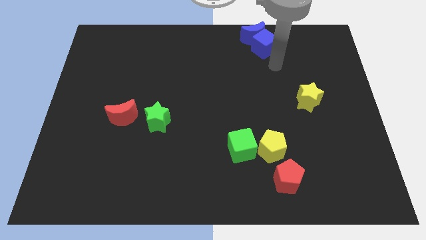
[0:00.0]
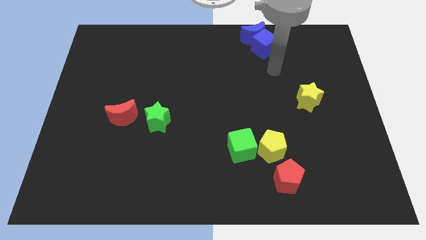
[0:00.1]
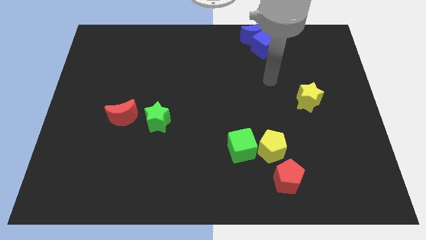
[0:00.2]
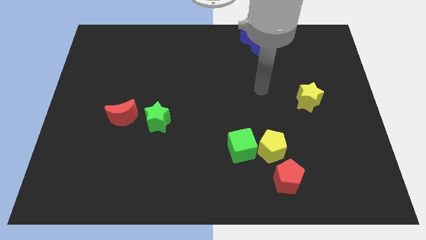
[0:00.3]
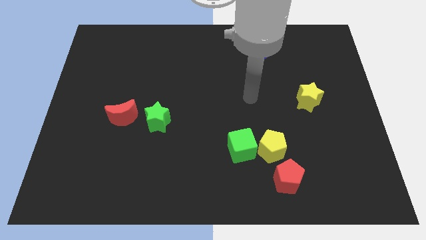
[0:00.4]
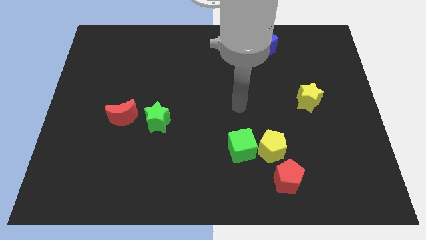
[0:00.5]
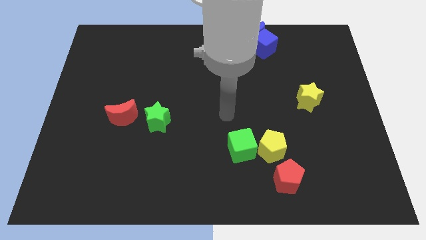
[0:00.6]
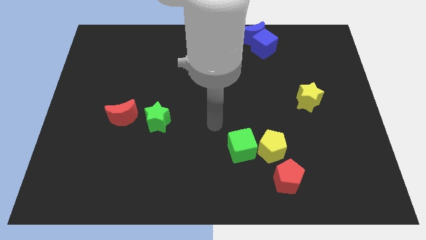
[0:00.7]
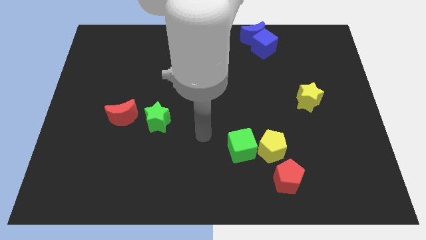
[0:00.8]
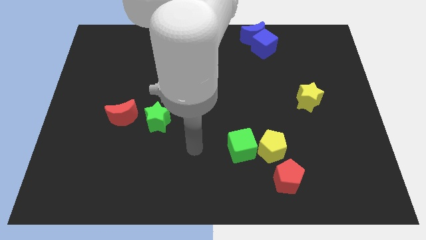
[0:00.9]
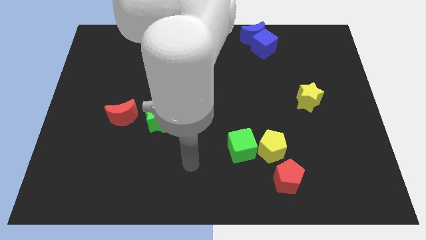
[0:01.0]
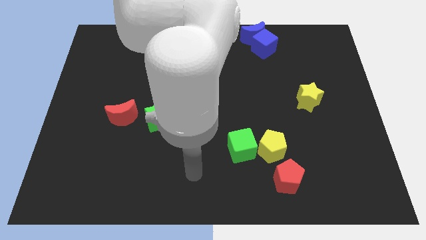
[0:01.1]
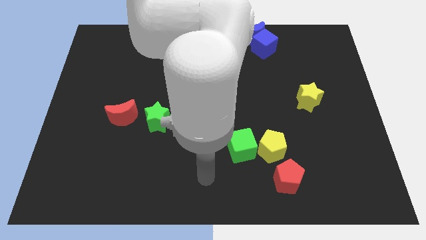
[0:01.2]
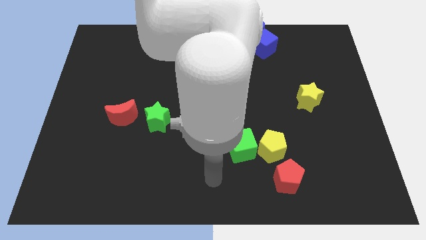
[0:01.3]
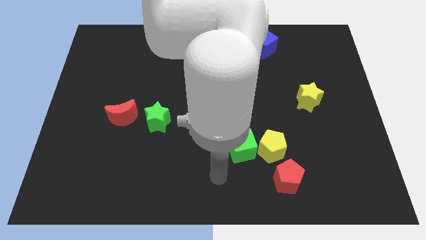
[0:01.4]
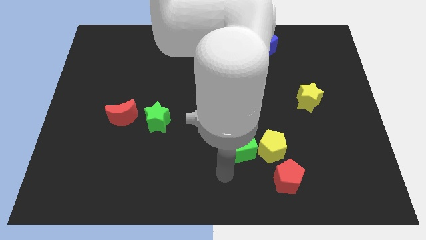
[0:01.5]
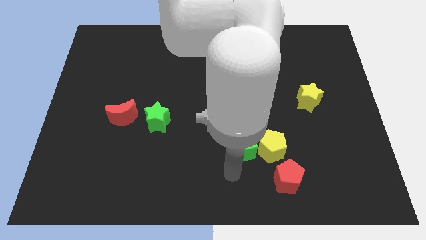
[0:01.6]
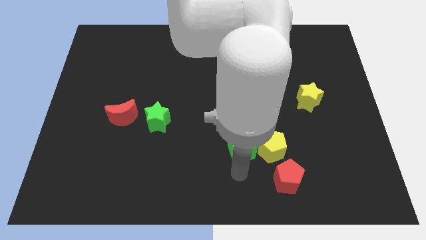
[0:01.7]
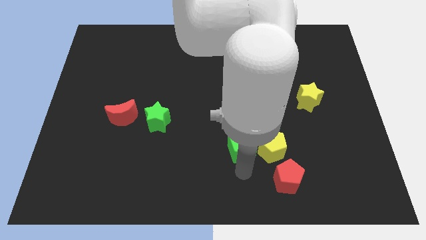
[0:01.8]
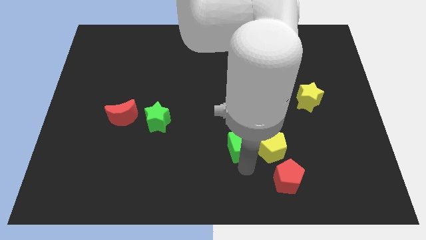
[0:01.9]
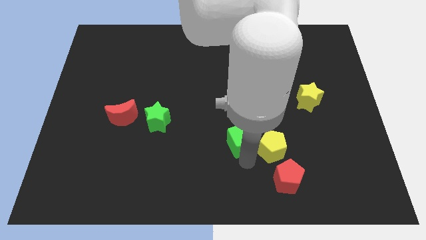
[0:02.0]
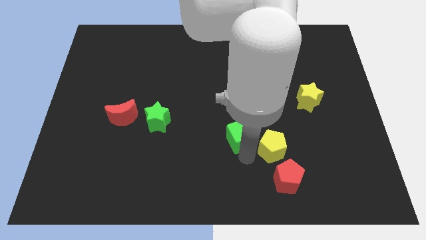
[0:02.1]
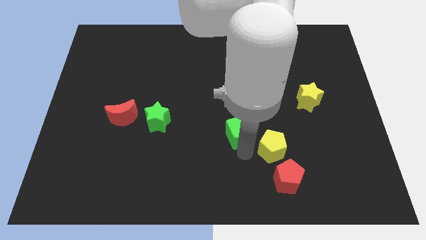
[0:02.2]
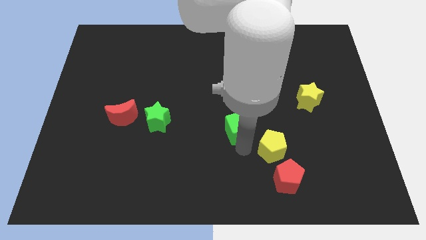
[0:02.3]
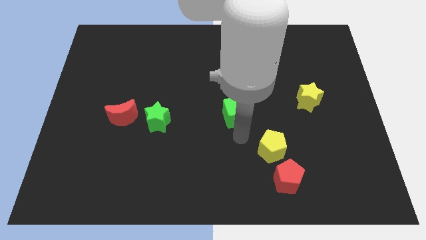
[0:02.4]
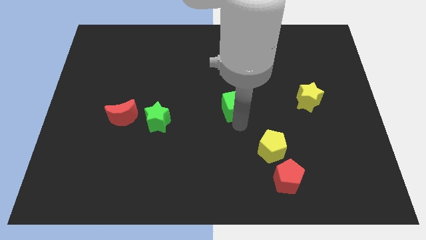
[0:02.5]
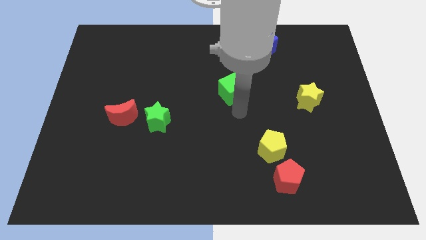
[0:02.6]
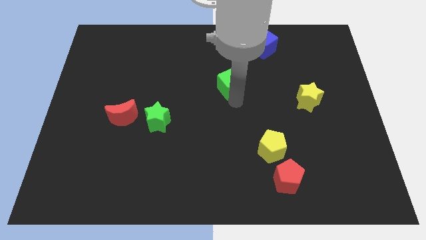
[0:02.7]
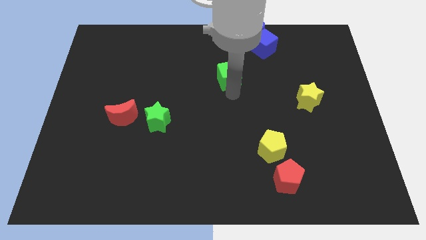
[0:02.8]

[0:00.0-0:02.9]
separate the green cube from yellow pentagon

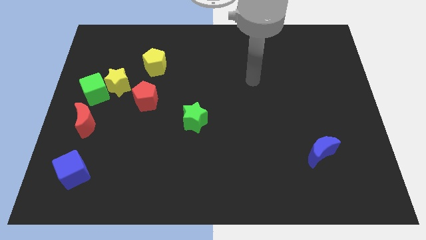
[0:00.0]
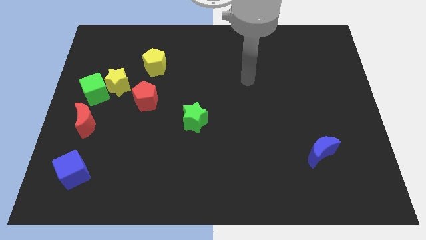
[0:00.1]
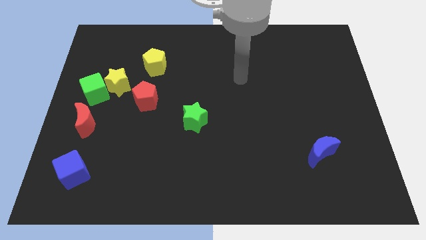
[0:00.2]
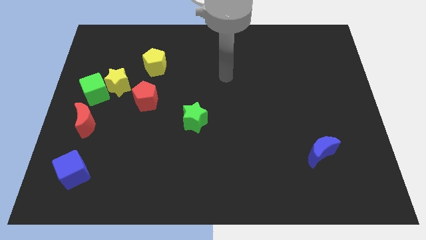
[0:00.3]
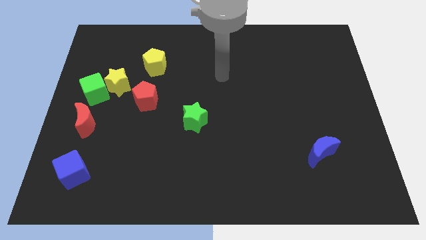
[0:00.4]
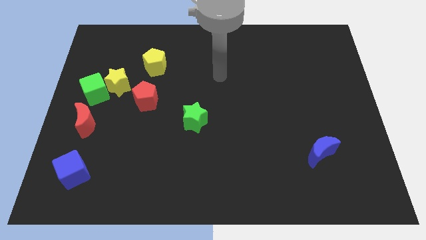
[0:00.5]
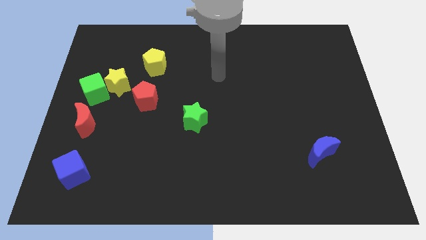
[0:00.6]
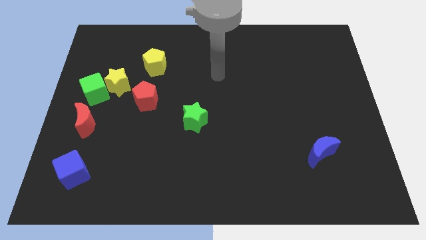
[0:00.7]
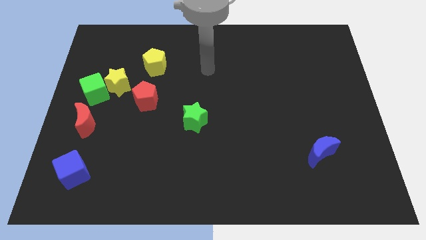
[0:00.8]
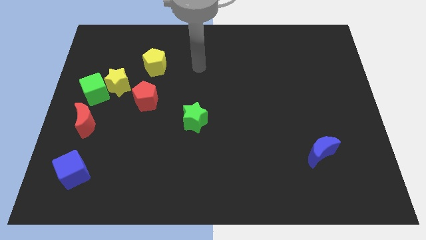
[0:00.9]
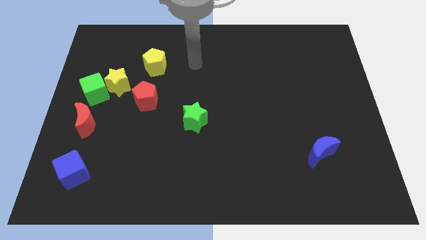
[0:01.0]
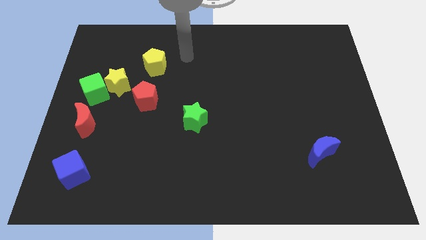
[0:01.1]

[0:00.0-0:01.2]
put your hand vertically above the green star

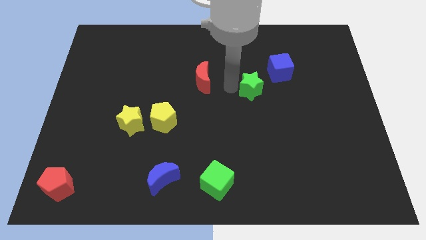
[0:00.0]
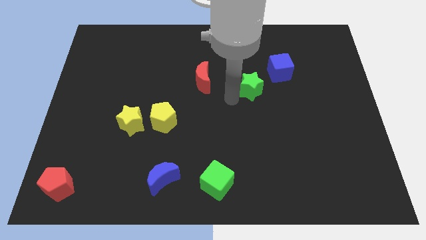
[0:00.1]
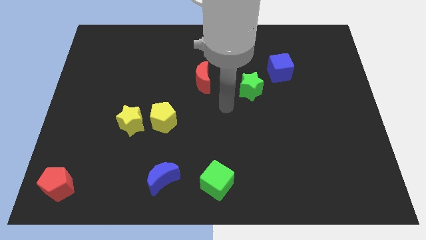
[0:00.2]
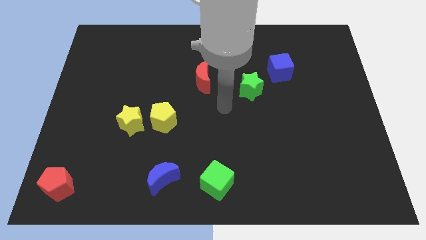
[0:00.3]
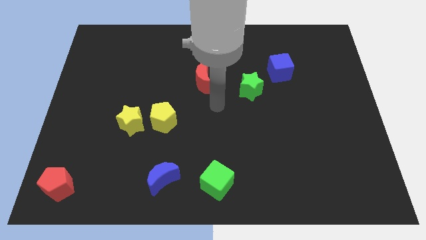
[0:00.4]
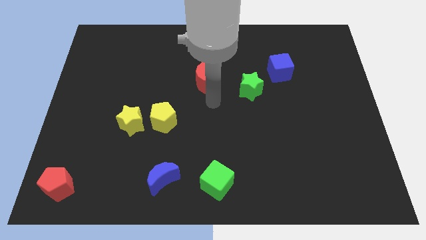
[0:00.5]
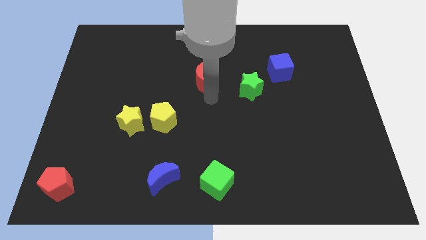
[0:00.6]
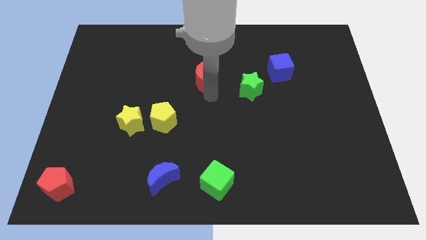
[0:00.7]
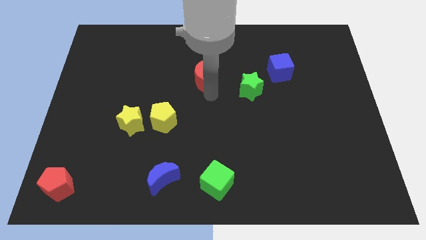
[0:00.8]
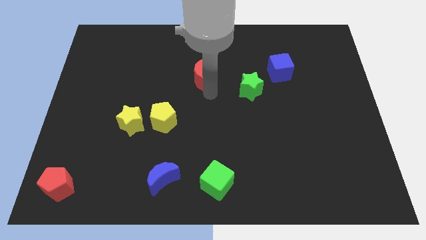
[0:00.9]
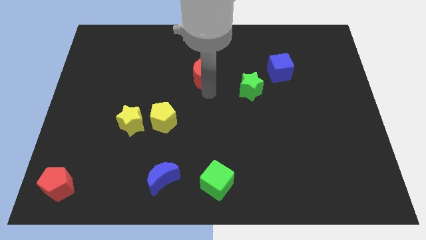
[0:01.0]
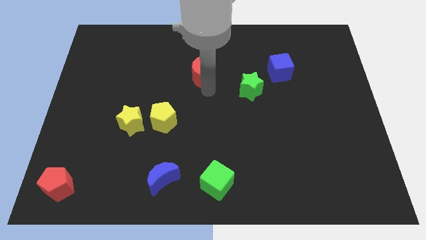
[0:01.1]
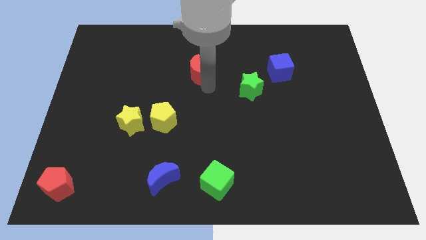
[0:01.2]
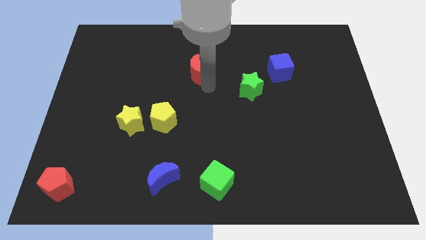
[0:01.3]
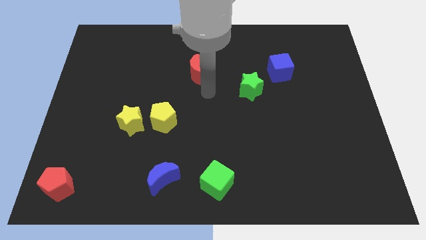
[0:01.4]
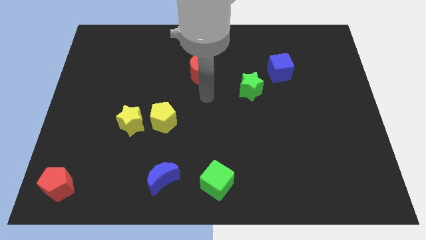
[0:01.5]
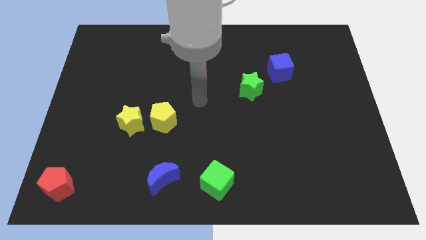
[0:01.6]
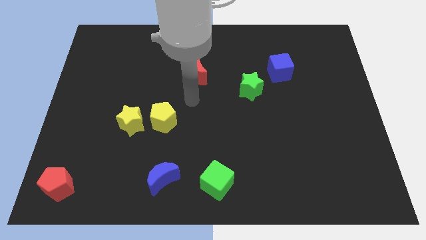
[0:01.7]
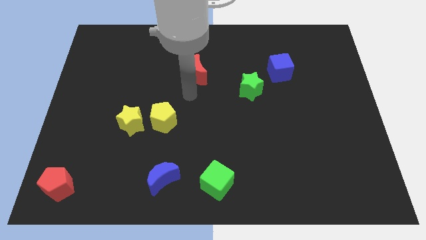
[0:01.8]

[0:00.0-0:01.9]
move the red crescent to the top

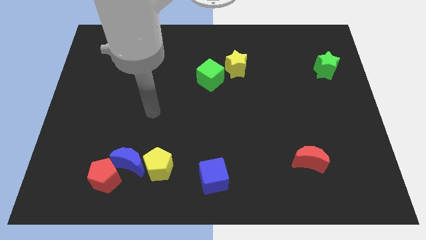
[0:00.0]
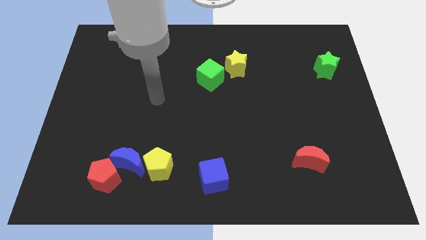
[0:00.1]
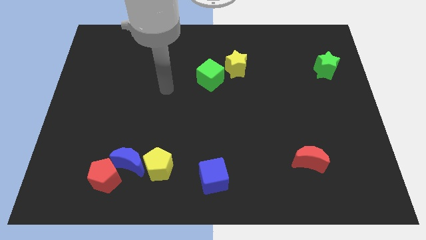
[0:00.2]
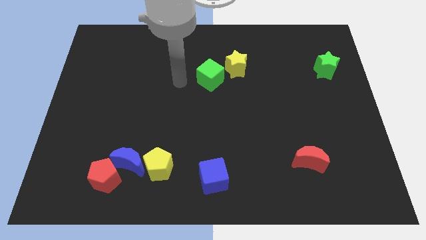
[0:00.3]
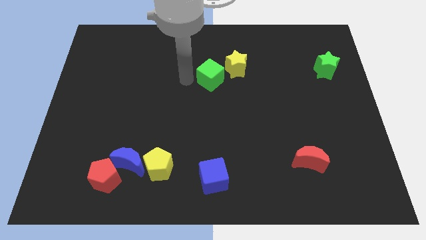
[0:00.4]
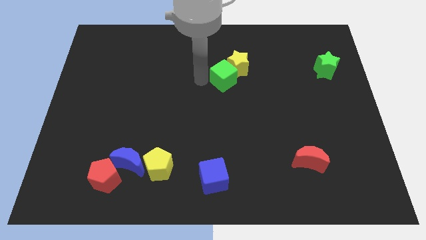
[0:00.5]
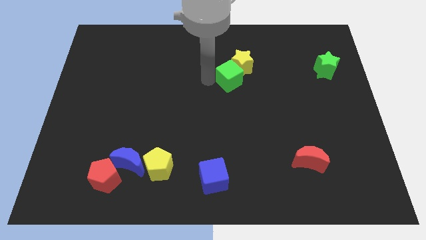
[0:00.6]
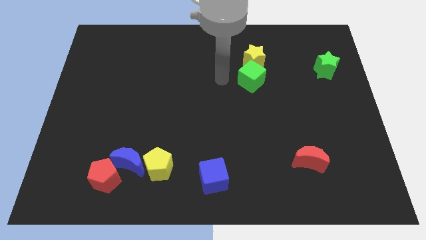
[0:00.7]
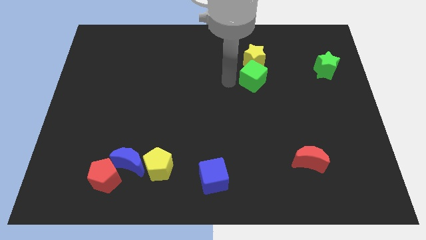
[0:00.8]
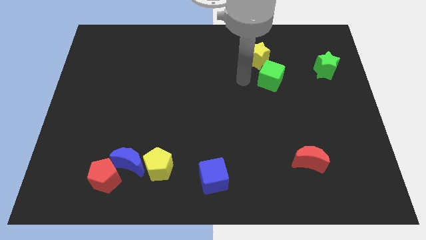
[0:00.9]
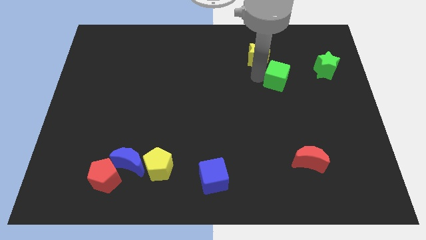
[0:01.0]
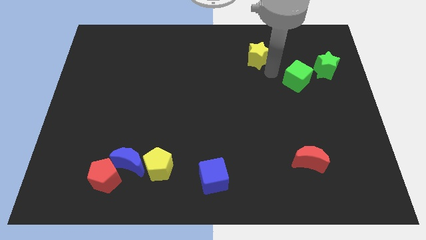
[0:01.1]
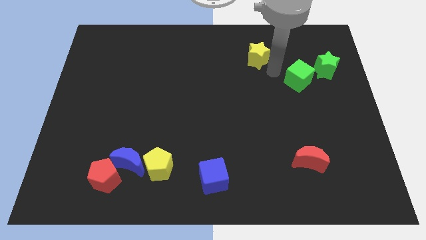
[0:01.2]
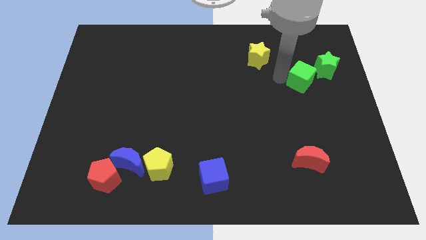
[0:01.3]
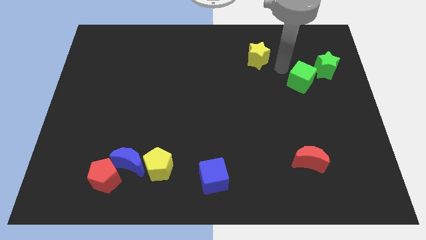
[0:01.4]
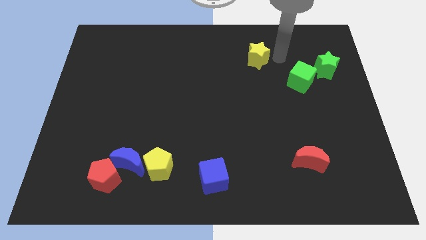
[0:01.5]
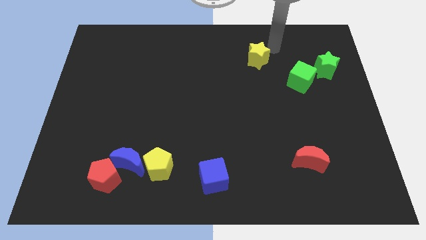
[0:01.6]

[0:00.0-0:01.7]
move the green cube close to the green star

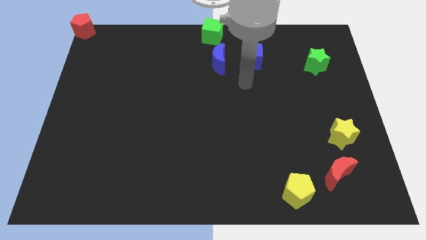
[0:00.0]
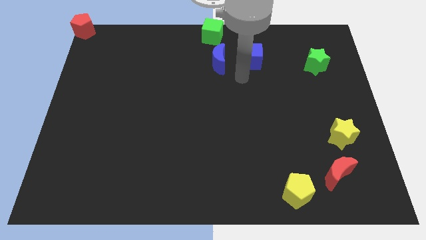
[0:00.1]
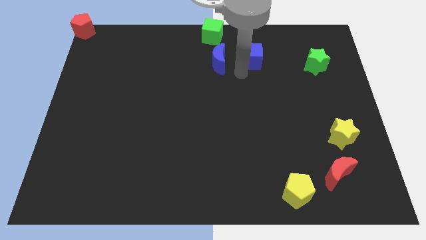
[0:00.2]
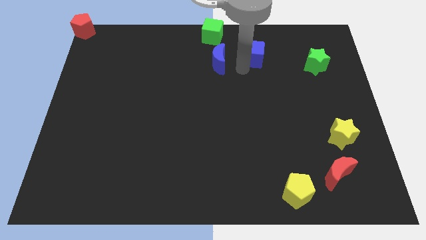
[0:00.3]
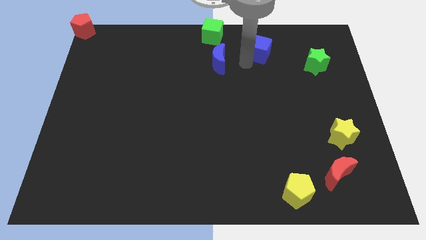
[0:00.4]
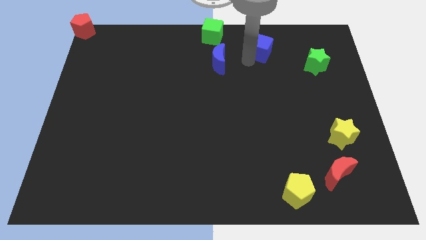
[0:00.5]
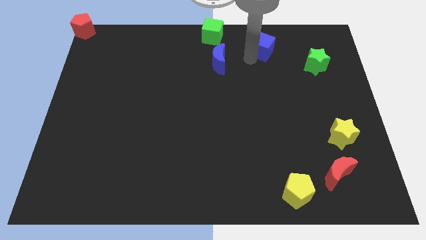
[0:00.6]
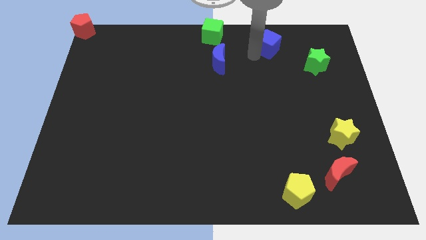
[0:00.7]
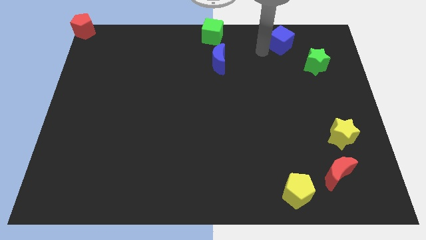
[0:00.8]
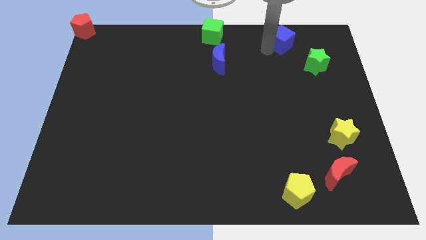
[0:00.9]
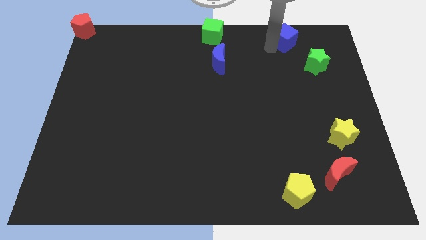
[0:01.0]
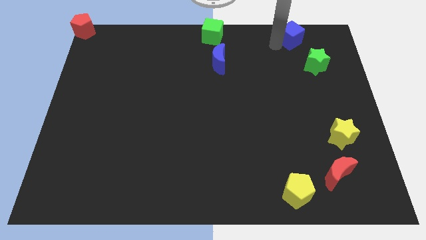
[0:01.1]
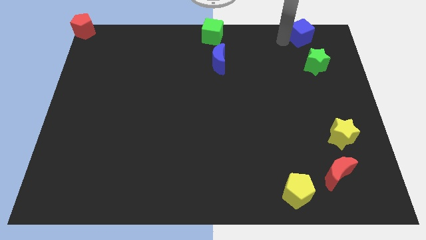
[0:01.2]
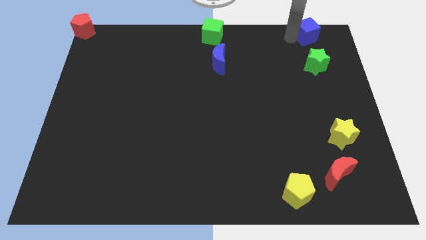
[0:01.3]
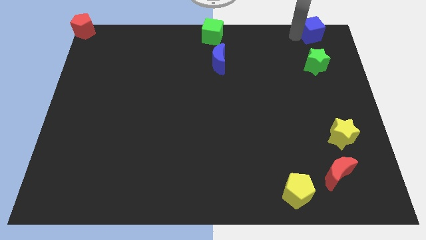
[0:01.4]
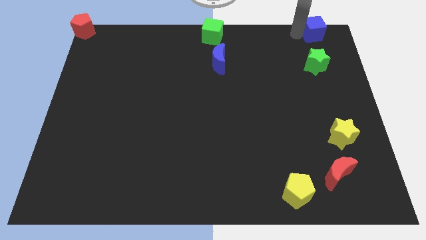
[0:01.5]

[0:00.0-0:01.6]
push the blue cube to the top side of the green star
